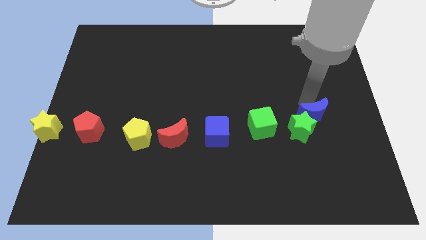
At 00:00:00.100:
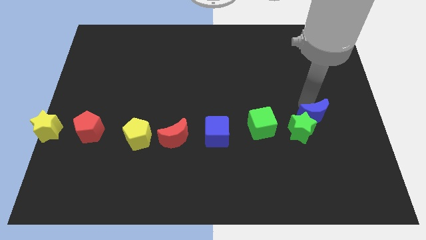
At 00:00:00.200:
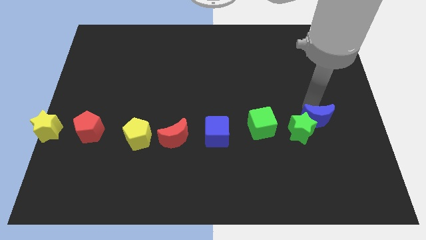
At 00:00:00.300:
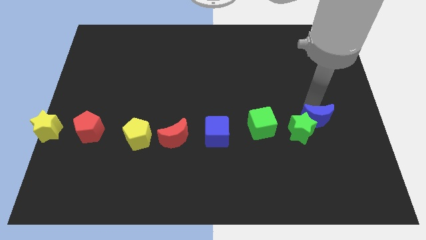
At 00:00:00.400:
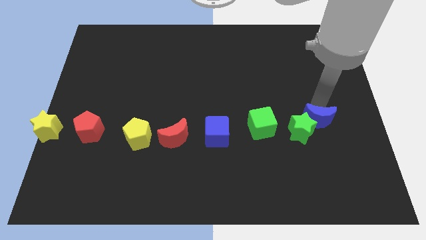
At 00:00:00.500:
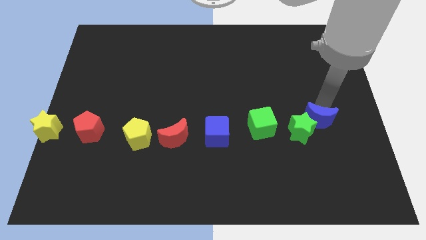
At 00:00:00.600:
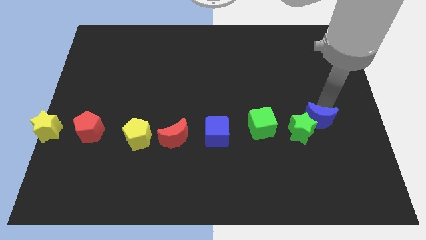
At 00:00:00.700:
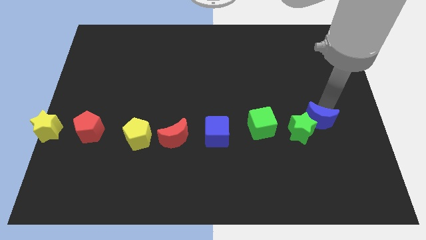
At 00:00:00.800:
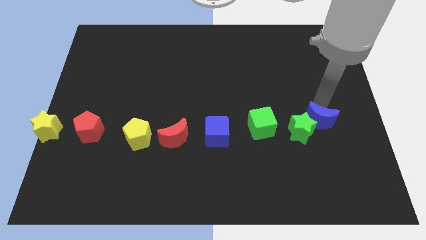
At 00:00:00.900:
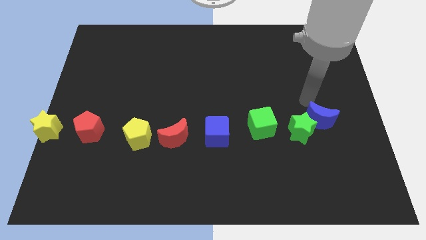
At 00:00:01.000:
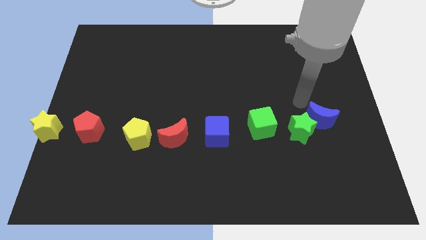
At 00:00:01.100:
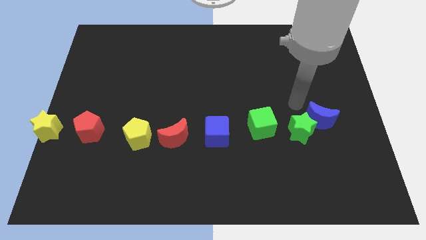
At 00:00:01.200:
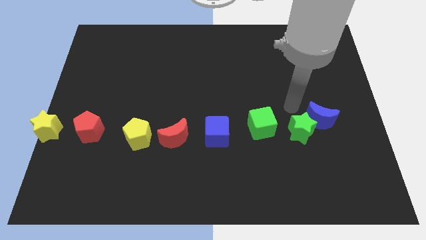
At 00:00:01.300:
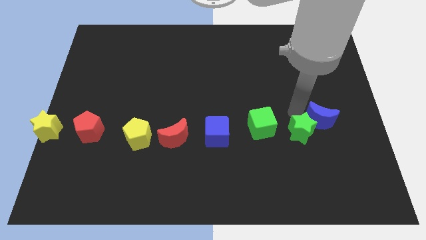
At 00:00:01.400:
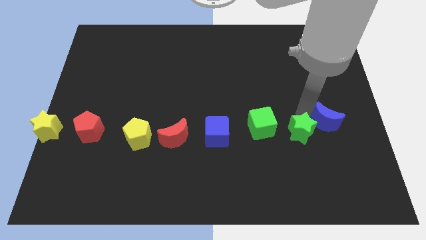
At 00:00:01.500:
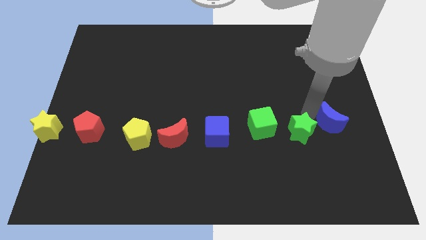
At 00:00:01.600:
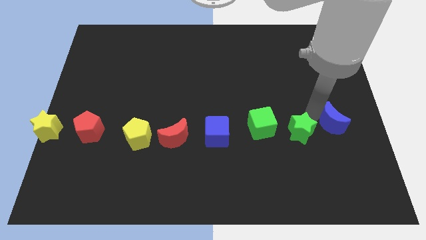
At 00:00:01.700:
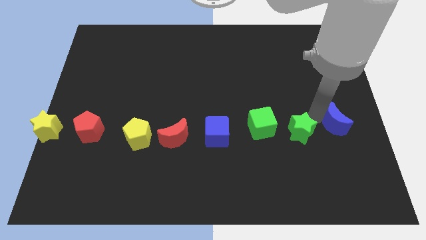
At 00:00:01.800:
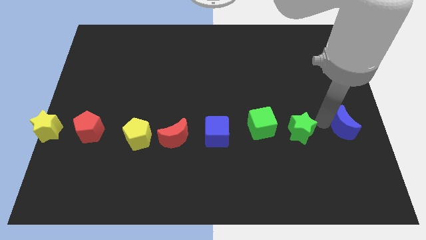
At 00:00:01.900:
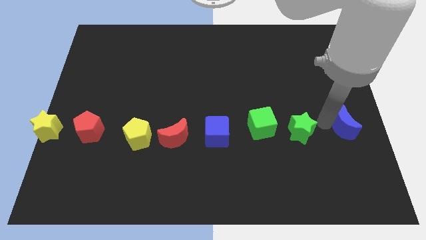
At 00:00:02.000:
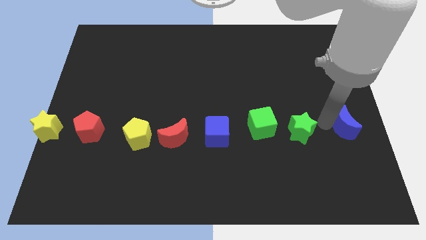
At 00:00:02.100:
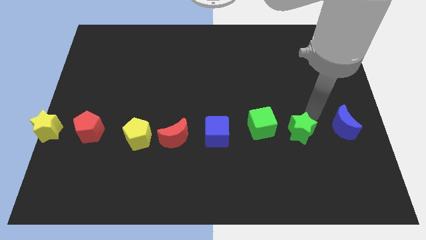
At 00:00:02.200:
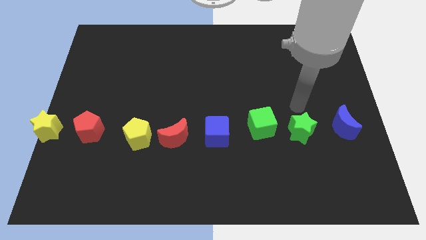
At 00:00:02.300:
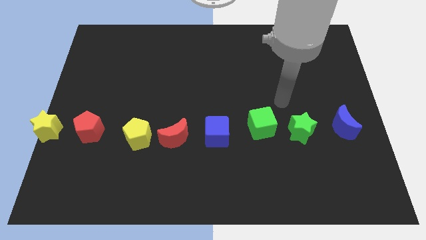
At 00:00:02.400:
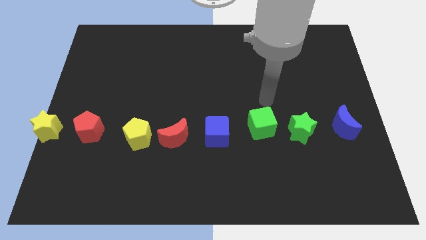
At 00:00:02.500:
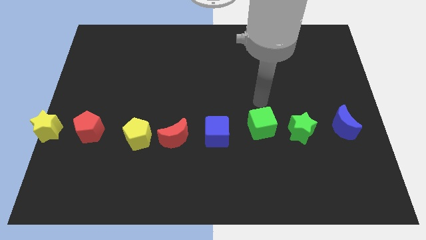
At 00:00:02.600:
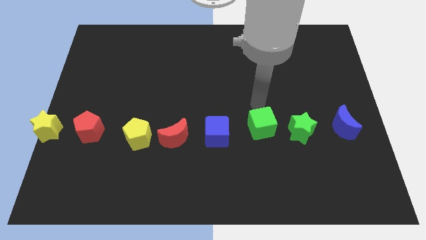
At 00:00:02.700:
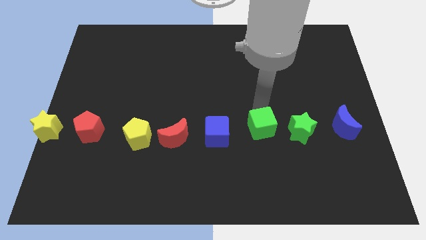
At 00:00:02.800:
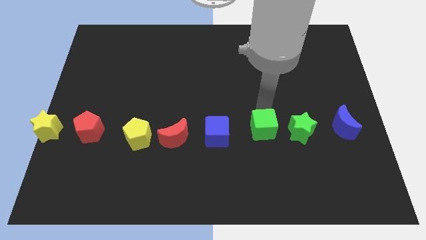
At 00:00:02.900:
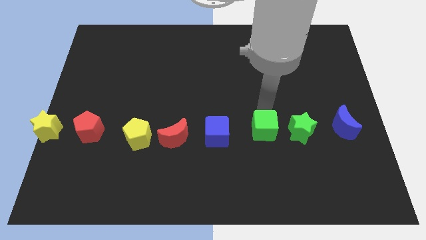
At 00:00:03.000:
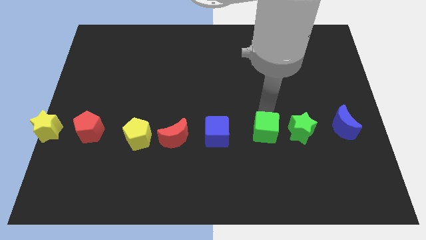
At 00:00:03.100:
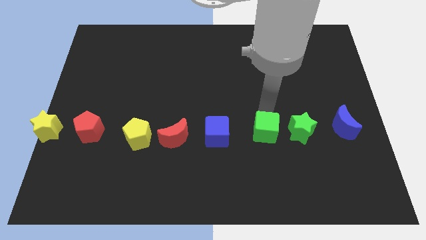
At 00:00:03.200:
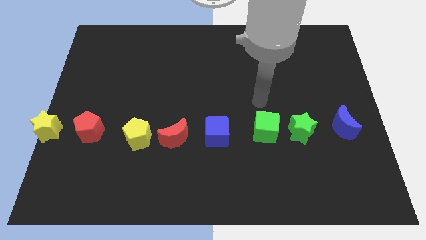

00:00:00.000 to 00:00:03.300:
line the blocks up horizontally

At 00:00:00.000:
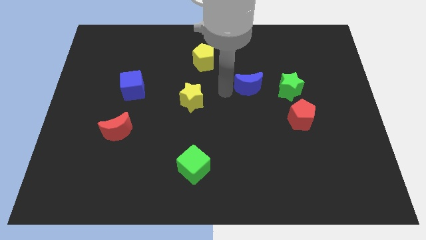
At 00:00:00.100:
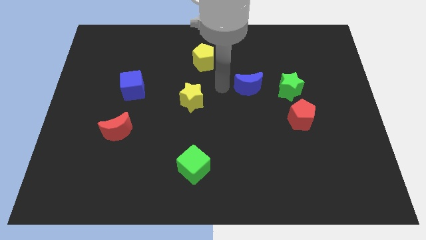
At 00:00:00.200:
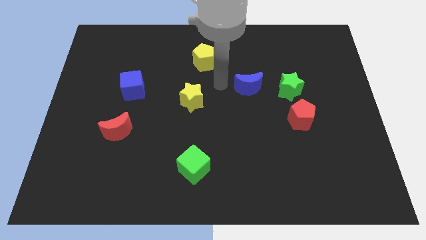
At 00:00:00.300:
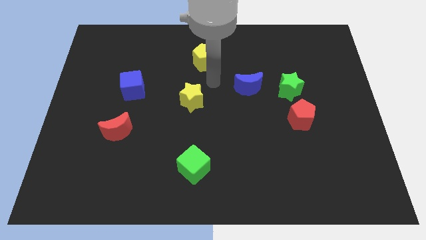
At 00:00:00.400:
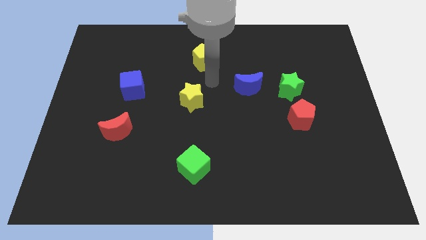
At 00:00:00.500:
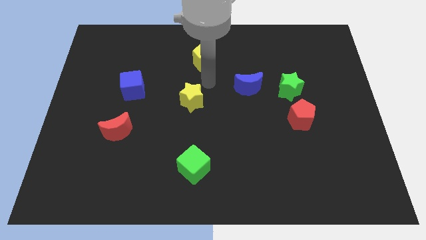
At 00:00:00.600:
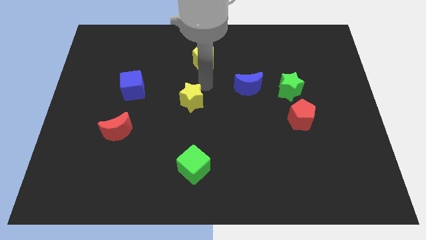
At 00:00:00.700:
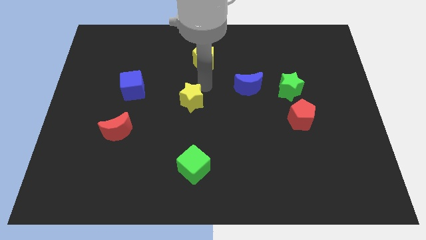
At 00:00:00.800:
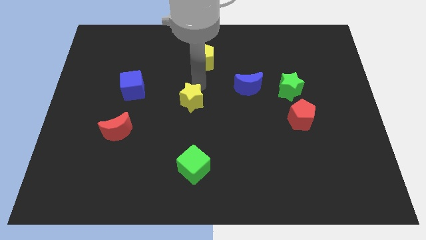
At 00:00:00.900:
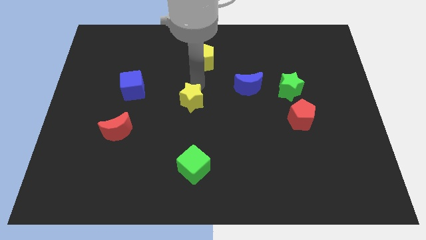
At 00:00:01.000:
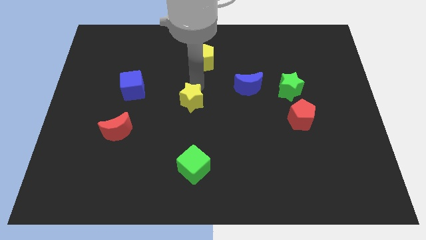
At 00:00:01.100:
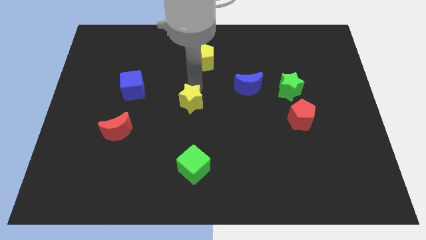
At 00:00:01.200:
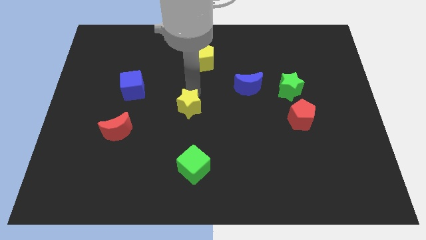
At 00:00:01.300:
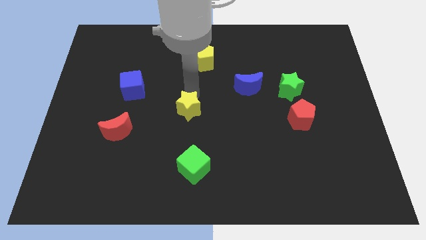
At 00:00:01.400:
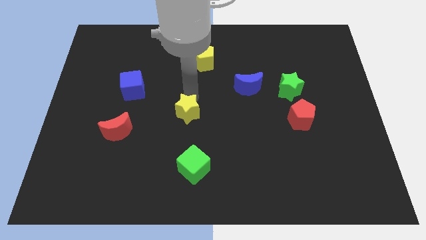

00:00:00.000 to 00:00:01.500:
move the yellow star to the center of the board

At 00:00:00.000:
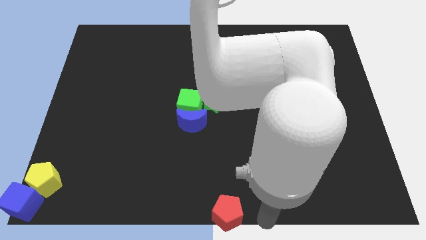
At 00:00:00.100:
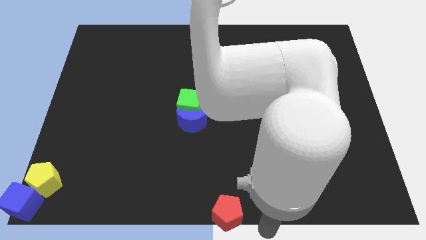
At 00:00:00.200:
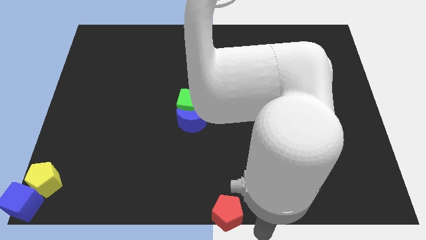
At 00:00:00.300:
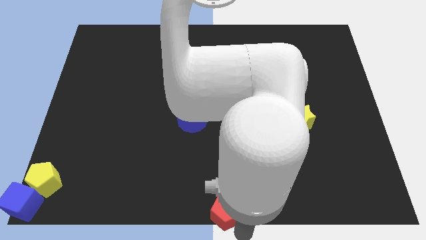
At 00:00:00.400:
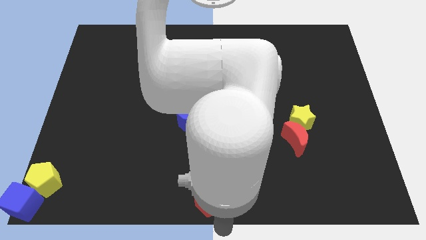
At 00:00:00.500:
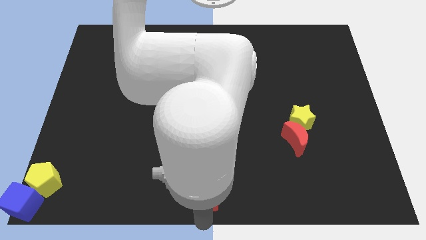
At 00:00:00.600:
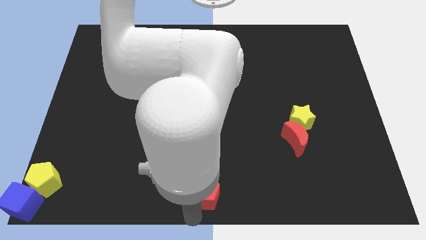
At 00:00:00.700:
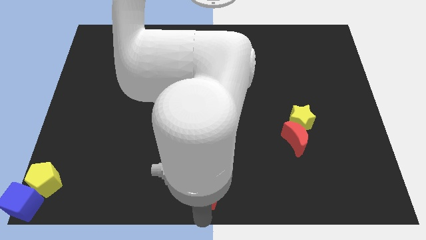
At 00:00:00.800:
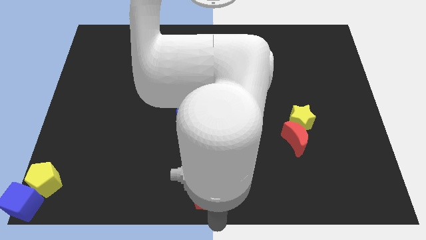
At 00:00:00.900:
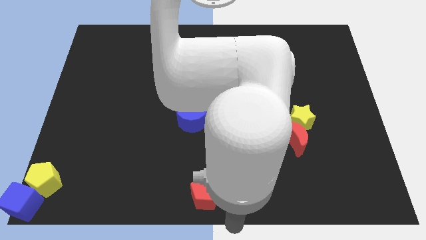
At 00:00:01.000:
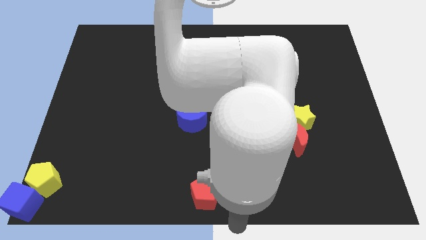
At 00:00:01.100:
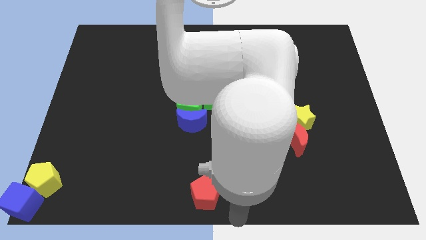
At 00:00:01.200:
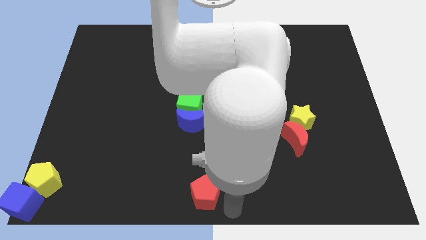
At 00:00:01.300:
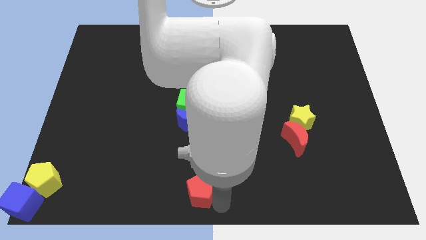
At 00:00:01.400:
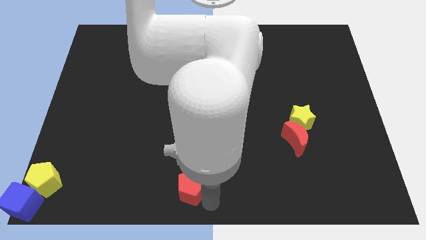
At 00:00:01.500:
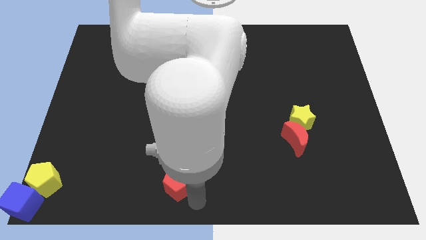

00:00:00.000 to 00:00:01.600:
push red pentagon below blue crescent

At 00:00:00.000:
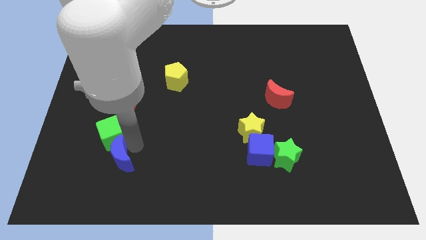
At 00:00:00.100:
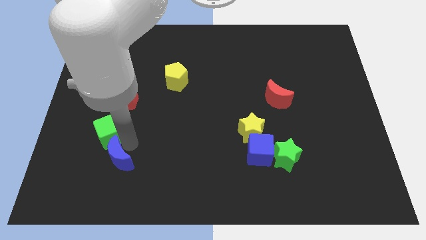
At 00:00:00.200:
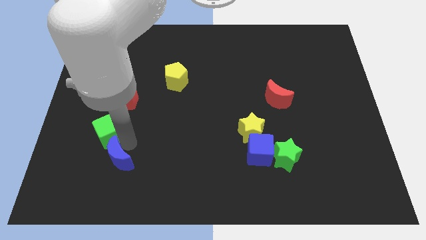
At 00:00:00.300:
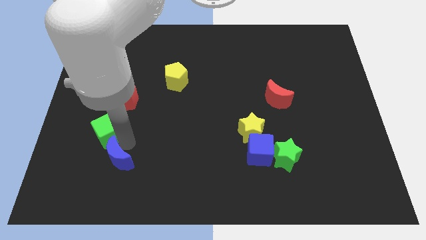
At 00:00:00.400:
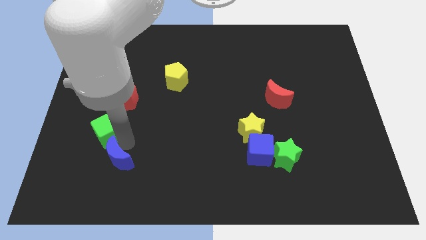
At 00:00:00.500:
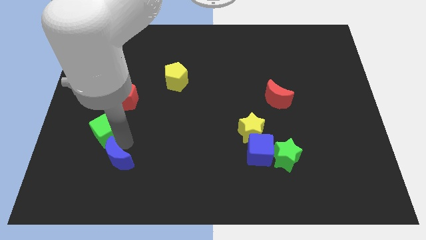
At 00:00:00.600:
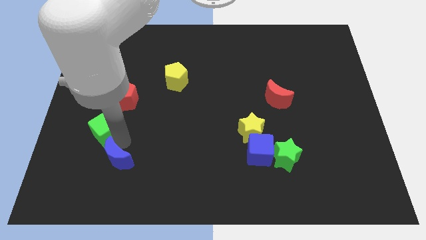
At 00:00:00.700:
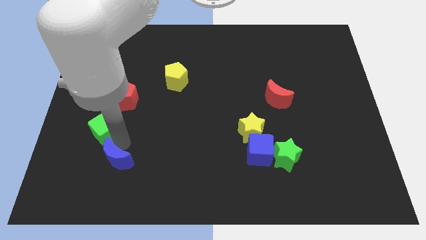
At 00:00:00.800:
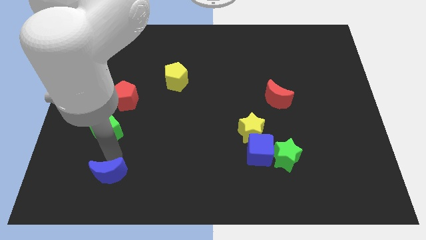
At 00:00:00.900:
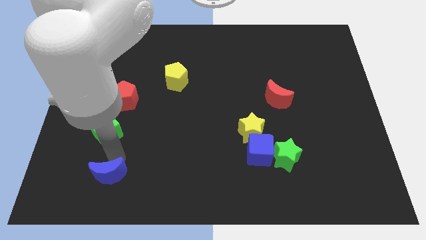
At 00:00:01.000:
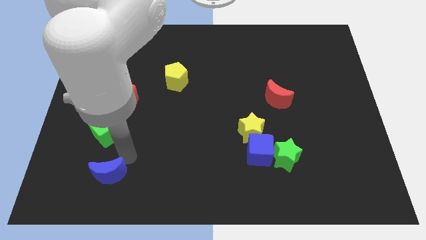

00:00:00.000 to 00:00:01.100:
separate blue moon from green cube

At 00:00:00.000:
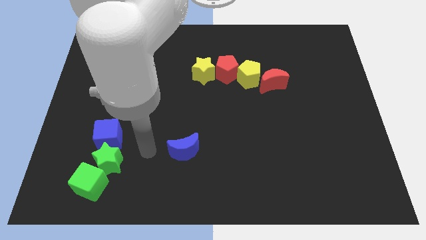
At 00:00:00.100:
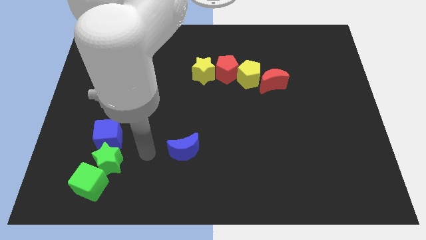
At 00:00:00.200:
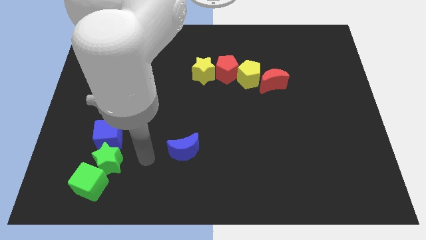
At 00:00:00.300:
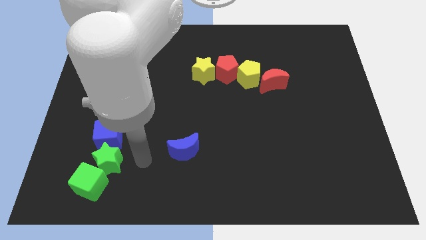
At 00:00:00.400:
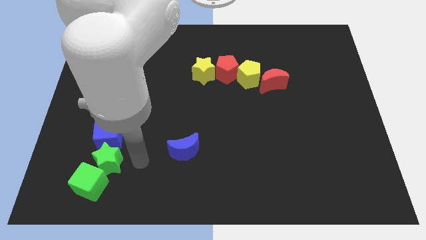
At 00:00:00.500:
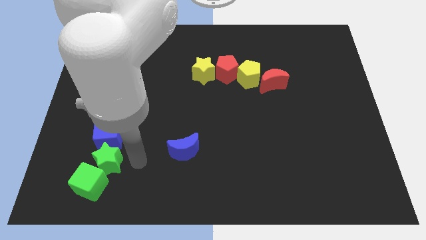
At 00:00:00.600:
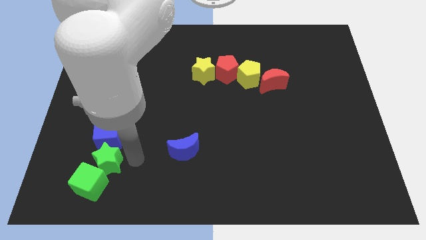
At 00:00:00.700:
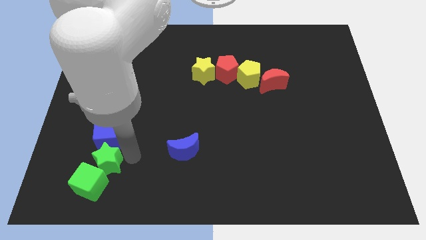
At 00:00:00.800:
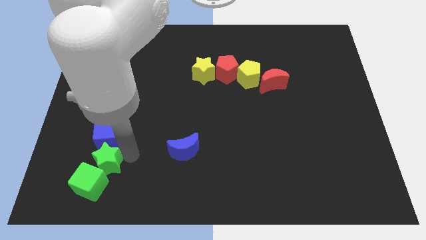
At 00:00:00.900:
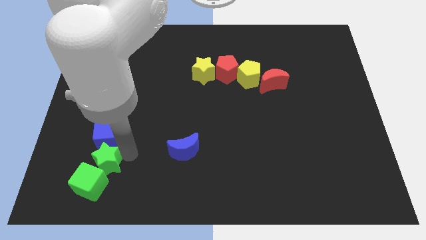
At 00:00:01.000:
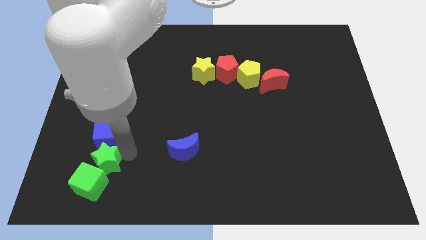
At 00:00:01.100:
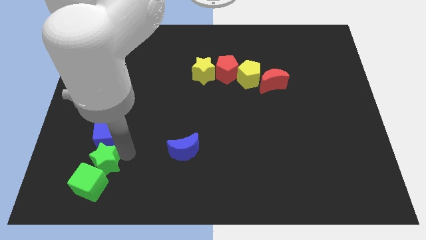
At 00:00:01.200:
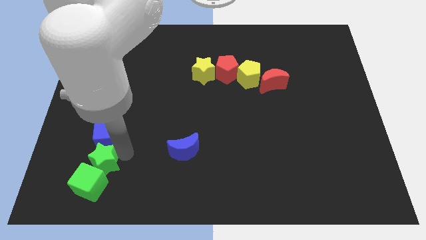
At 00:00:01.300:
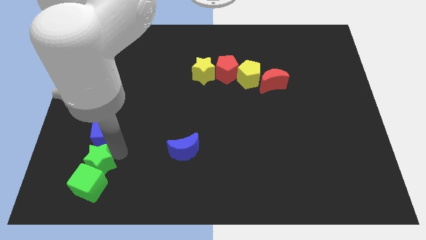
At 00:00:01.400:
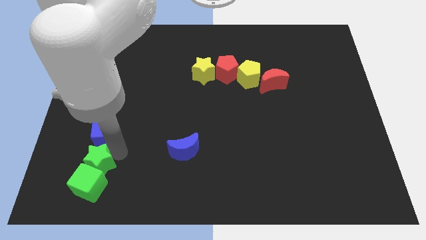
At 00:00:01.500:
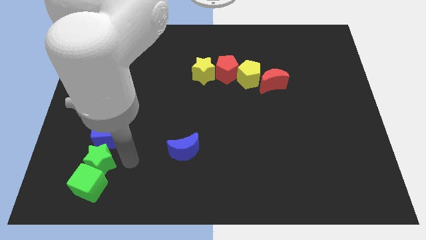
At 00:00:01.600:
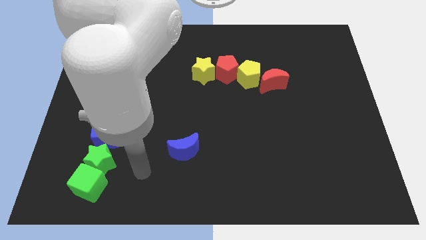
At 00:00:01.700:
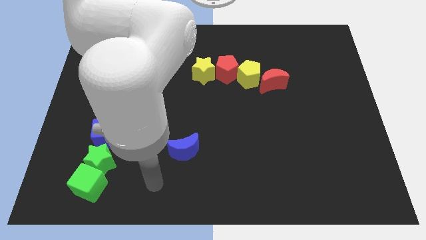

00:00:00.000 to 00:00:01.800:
slightly push the green star in between green cube and blue cube
